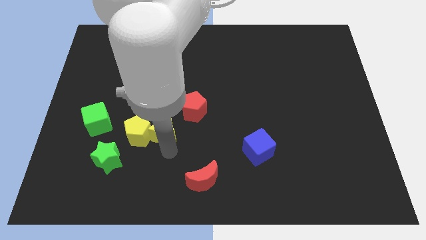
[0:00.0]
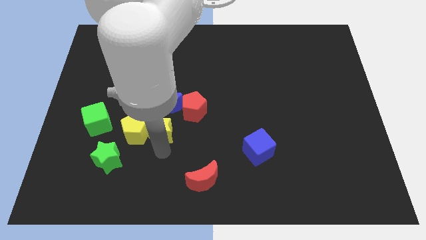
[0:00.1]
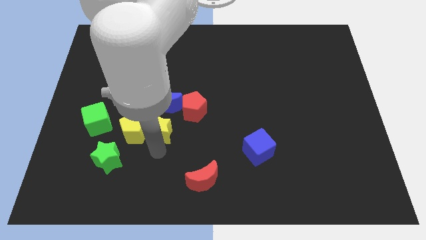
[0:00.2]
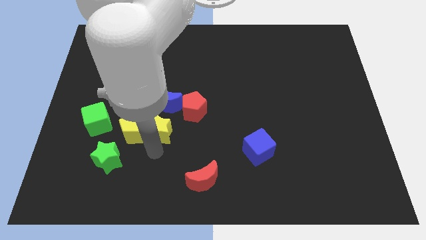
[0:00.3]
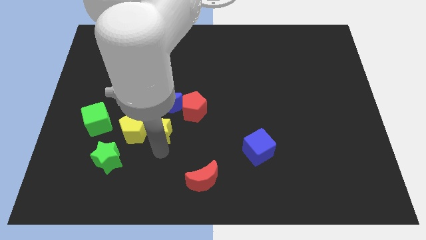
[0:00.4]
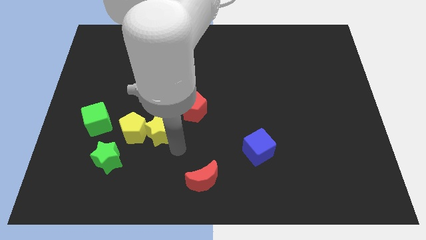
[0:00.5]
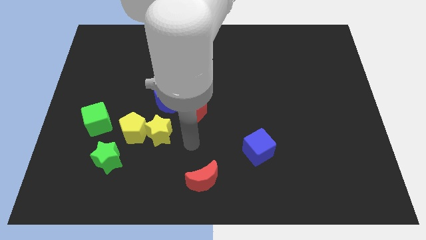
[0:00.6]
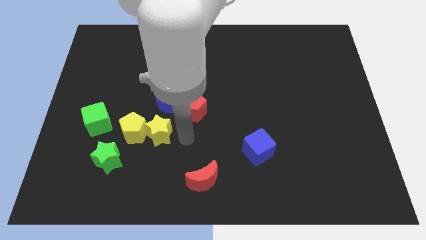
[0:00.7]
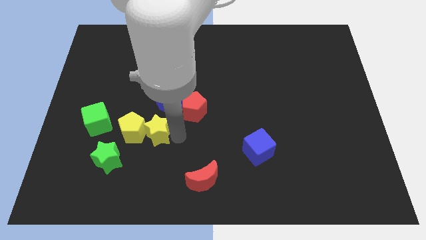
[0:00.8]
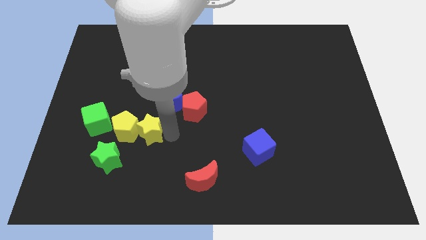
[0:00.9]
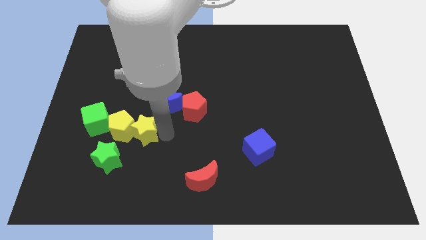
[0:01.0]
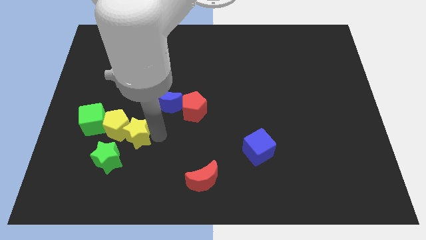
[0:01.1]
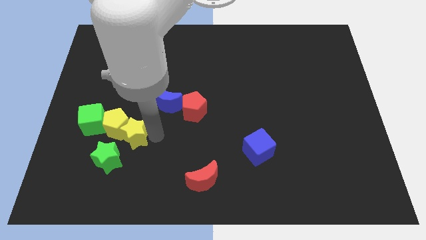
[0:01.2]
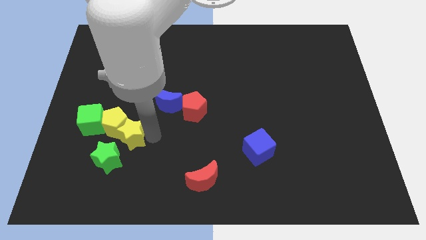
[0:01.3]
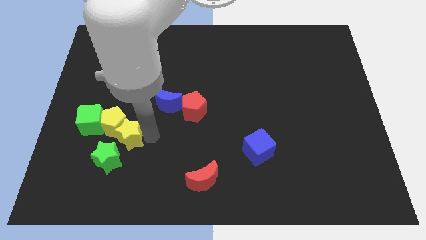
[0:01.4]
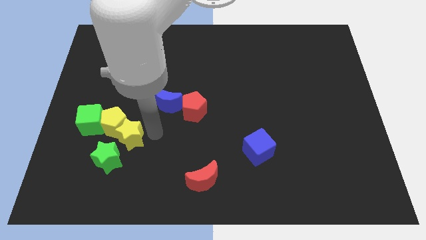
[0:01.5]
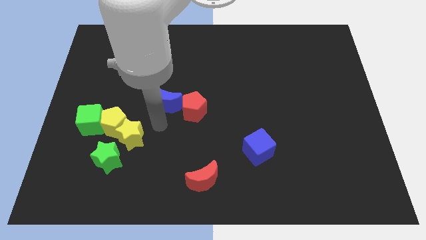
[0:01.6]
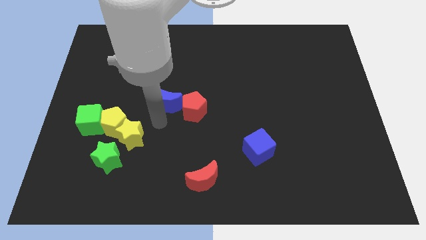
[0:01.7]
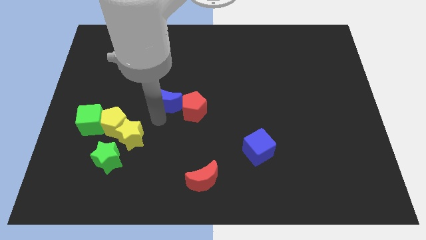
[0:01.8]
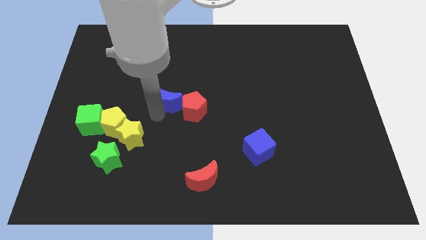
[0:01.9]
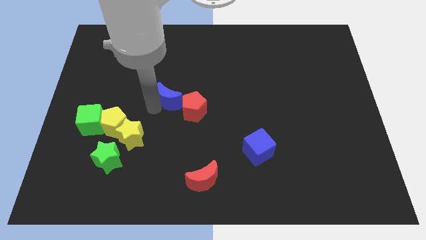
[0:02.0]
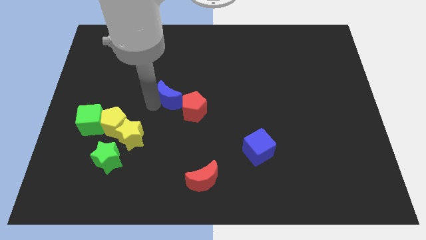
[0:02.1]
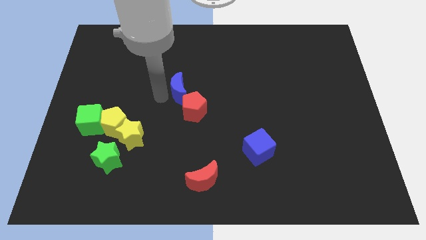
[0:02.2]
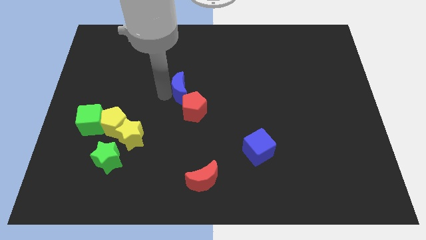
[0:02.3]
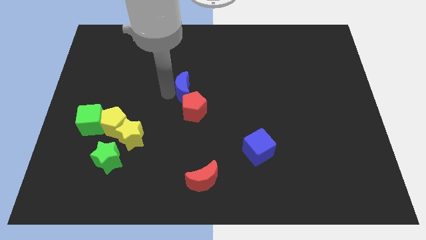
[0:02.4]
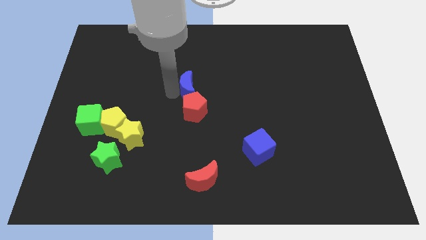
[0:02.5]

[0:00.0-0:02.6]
slightly move the yellow star into the green cube along with the yellow pentagon

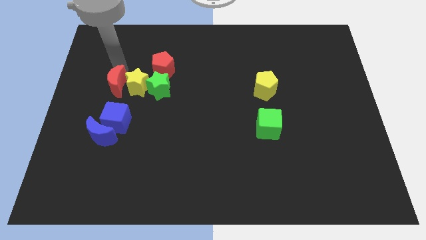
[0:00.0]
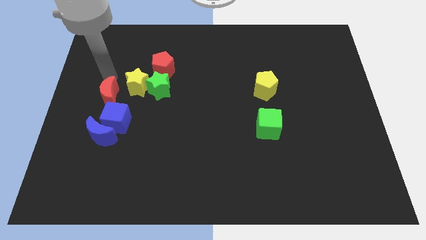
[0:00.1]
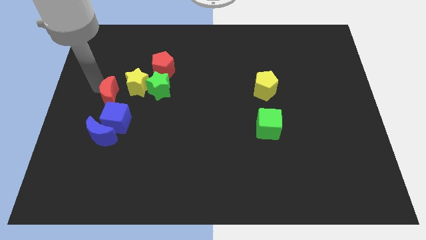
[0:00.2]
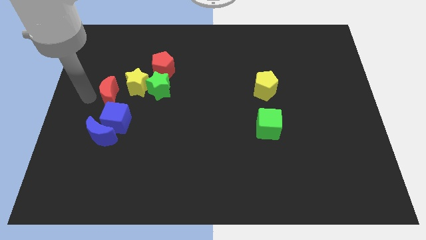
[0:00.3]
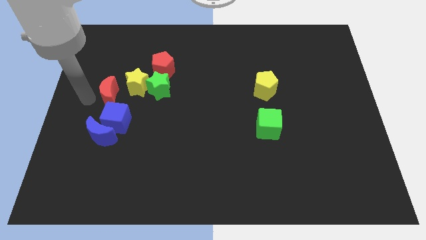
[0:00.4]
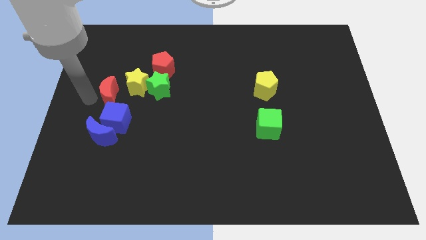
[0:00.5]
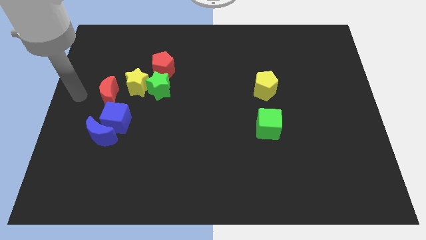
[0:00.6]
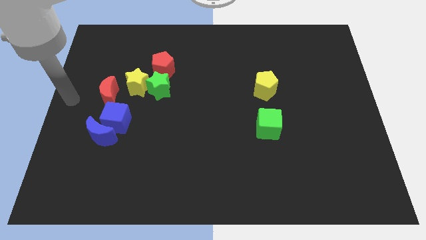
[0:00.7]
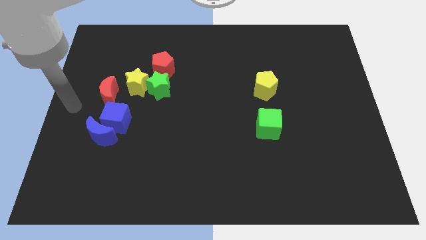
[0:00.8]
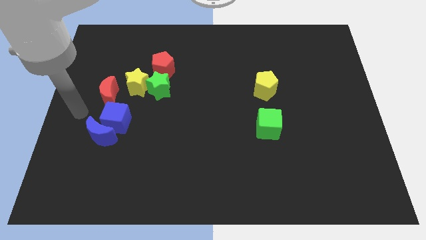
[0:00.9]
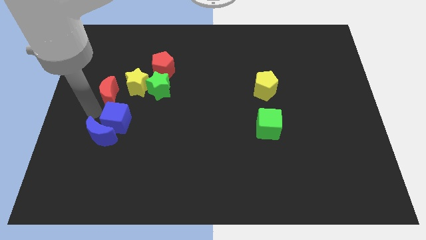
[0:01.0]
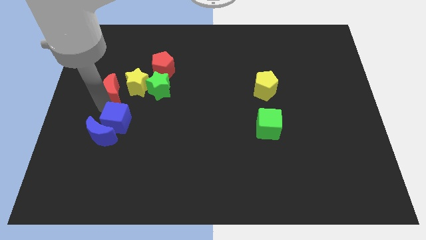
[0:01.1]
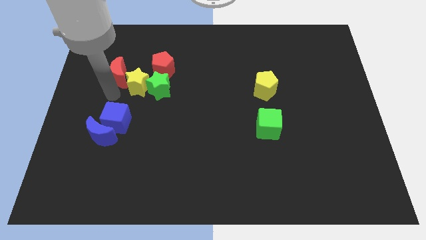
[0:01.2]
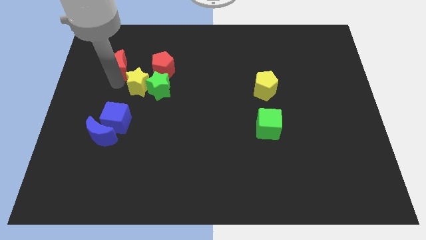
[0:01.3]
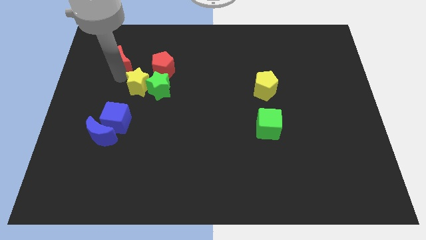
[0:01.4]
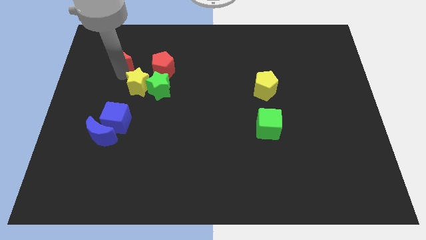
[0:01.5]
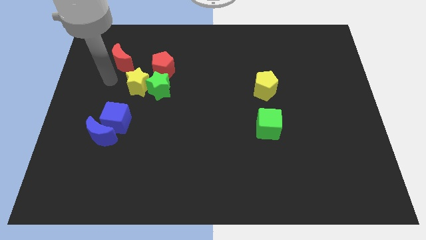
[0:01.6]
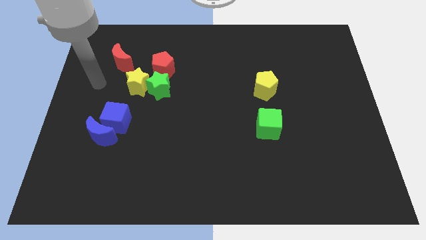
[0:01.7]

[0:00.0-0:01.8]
place the red moon diagonal above yellow star

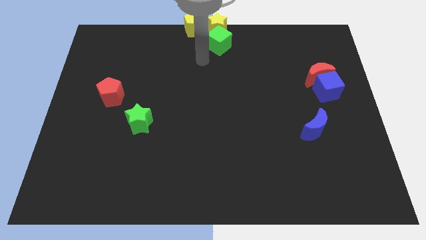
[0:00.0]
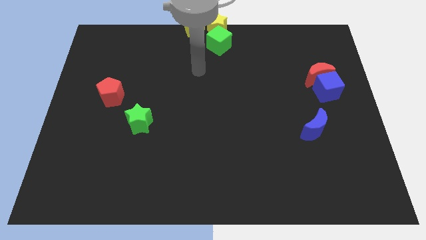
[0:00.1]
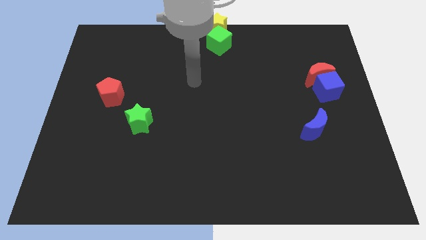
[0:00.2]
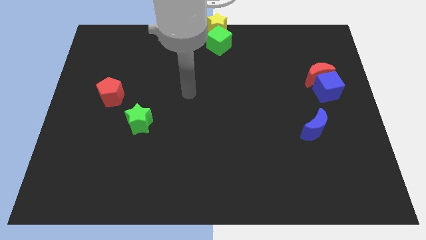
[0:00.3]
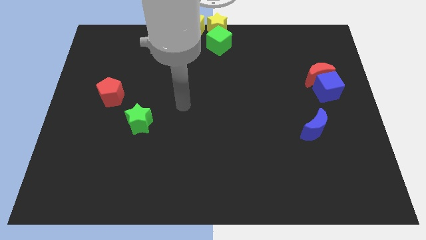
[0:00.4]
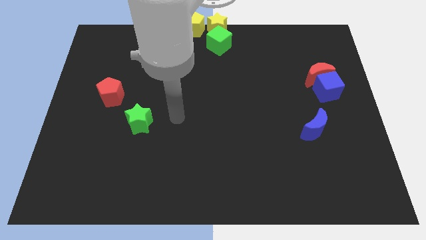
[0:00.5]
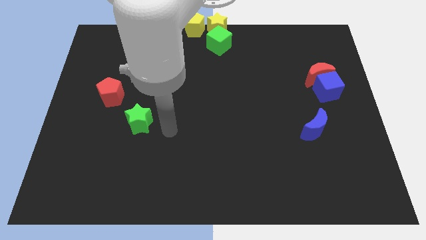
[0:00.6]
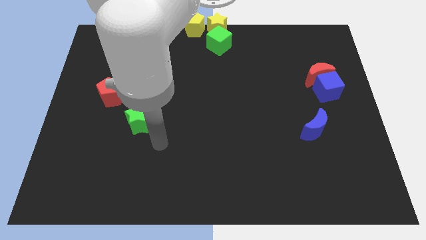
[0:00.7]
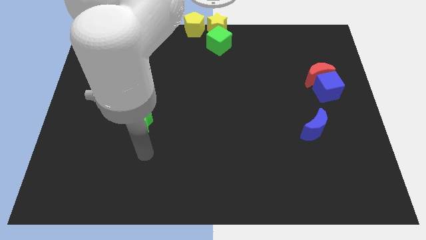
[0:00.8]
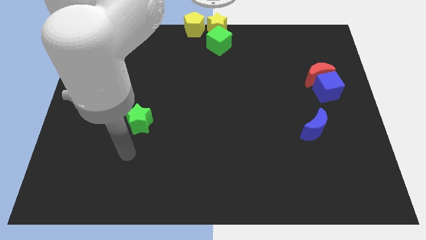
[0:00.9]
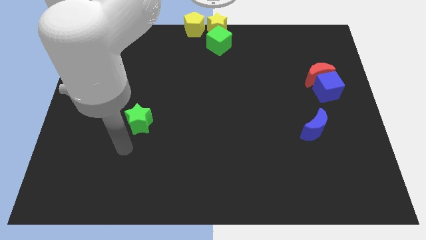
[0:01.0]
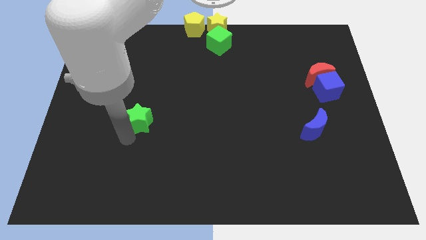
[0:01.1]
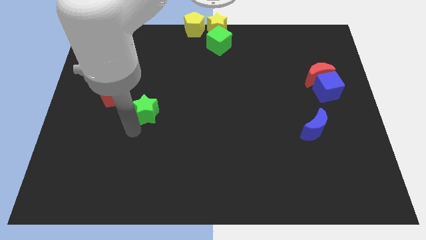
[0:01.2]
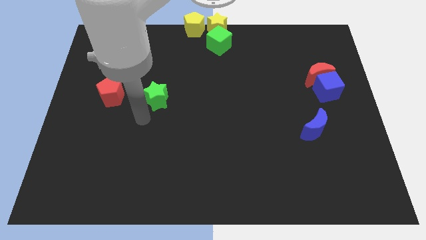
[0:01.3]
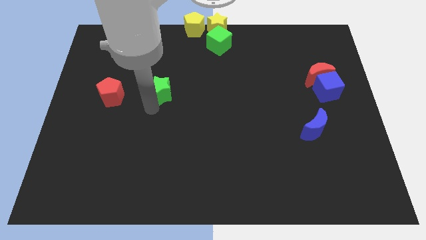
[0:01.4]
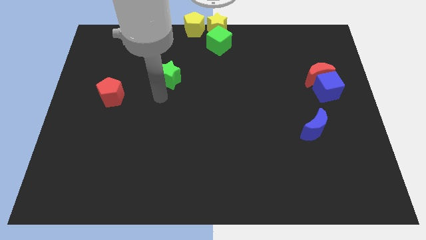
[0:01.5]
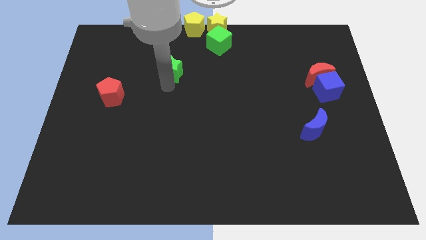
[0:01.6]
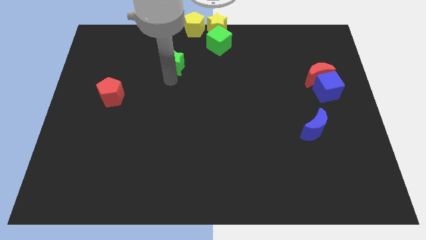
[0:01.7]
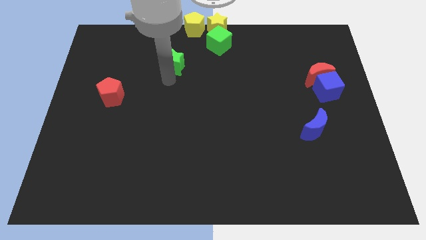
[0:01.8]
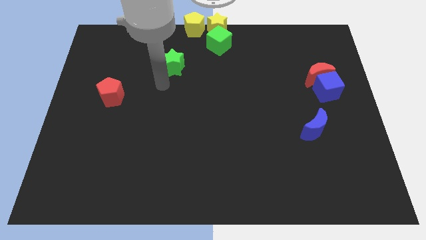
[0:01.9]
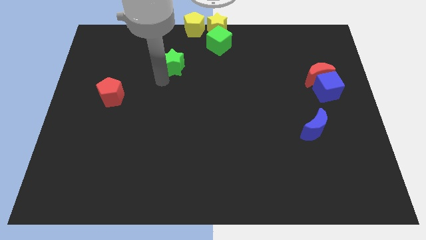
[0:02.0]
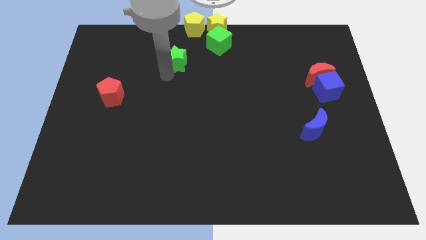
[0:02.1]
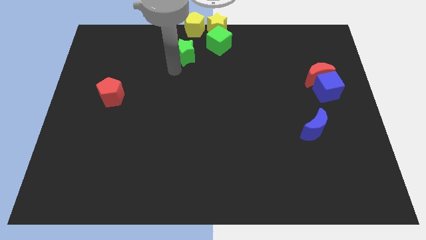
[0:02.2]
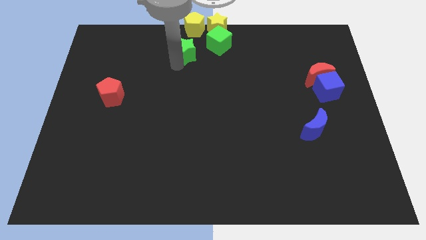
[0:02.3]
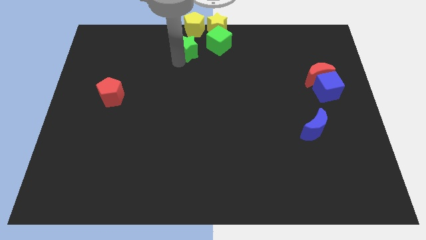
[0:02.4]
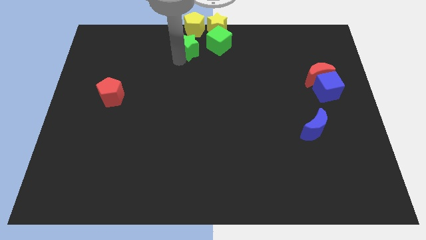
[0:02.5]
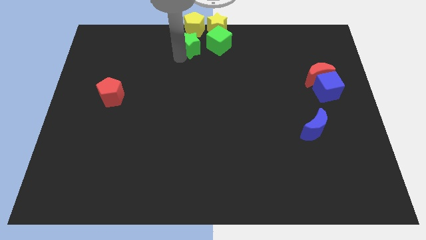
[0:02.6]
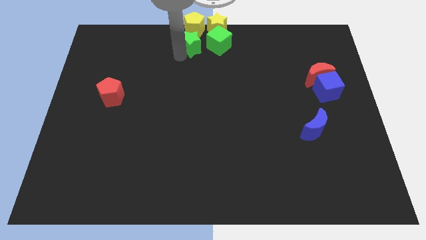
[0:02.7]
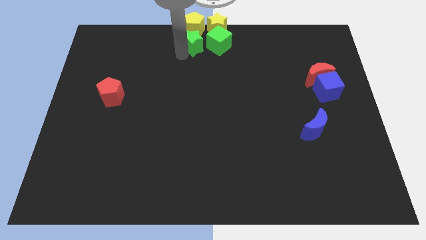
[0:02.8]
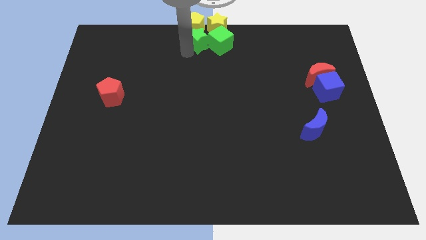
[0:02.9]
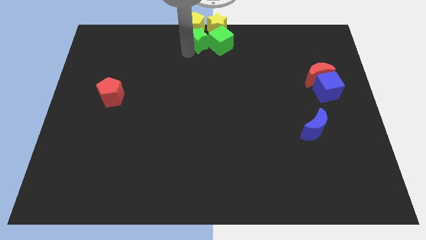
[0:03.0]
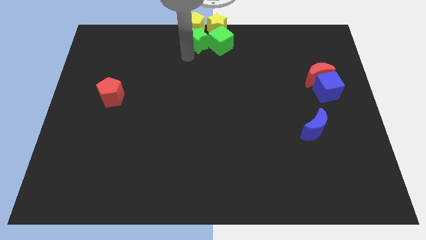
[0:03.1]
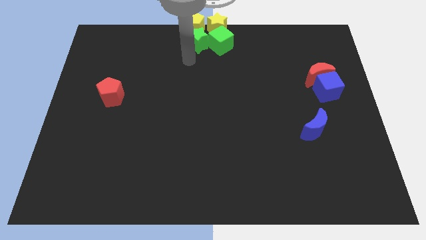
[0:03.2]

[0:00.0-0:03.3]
push the green star into green cube

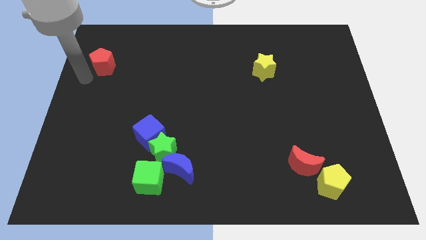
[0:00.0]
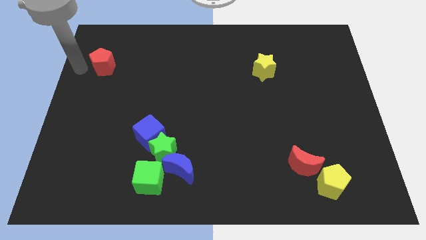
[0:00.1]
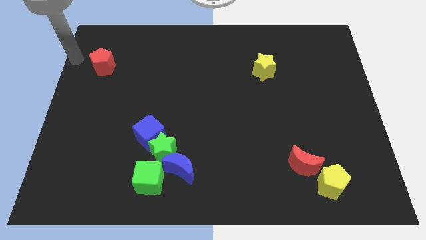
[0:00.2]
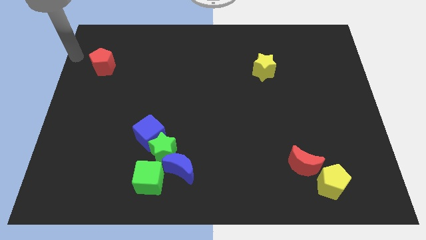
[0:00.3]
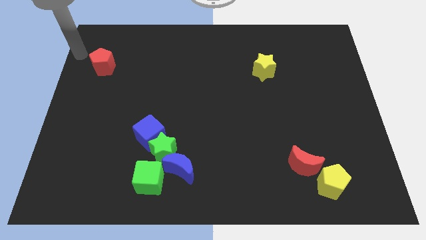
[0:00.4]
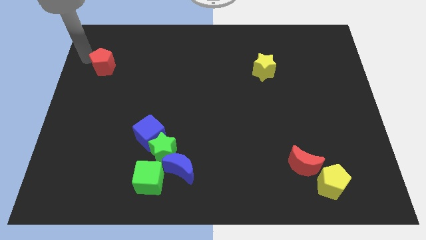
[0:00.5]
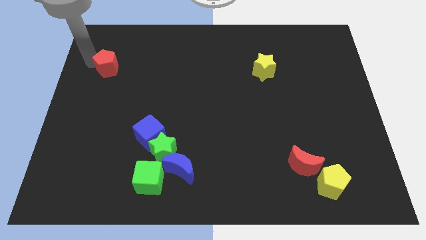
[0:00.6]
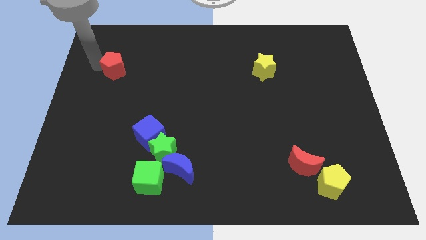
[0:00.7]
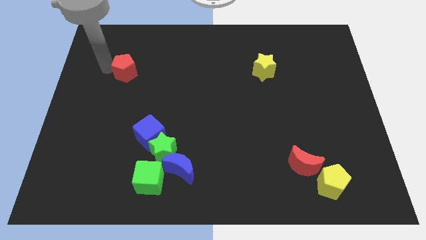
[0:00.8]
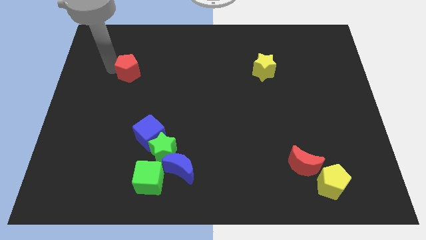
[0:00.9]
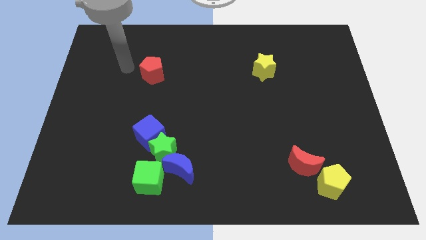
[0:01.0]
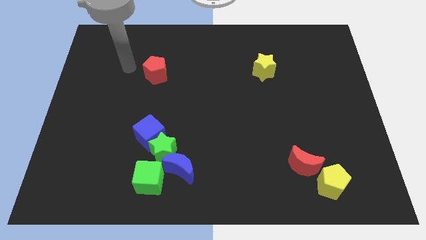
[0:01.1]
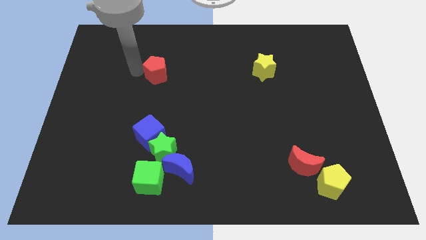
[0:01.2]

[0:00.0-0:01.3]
place the red pentagon above the blue cube
